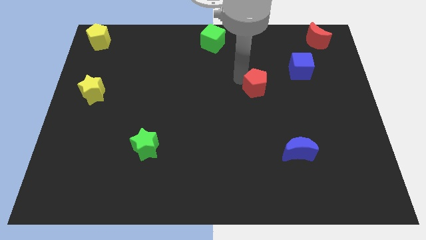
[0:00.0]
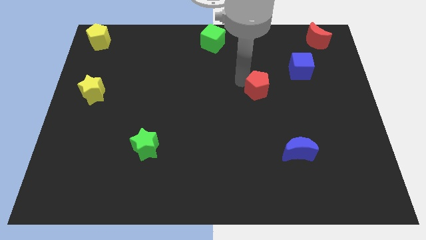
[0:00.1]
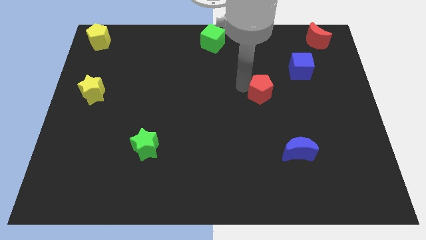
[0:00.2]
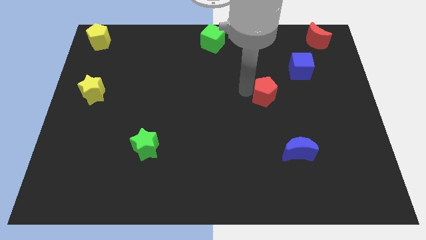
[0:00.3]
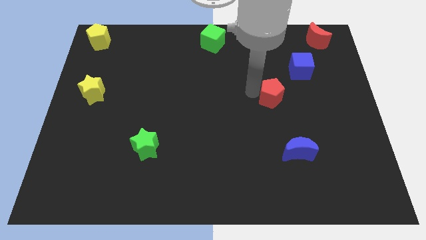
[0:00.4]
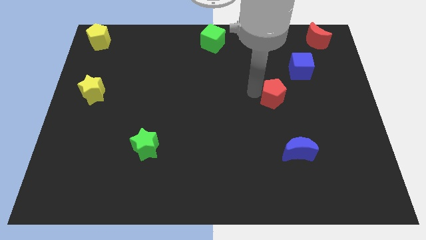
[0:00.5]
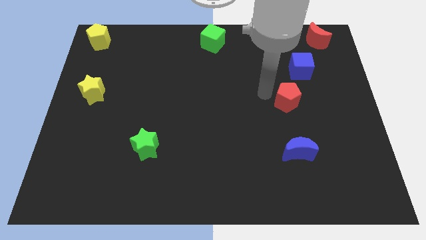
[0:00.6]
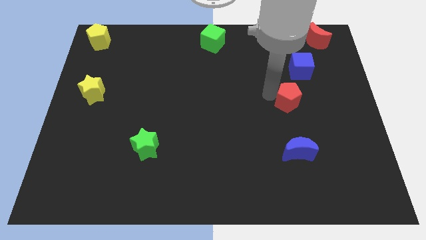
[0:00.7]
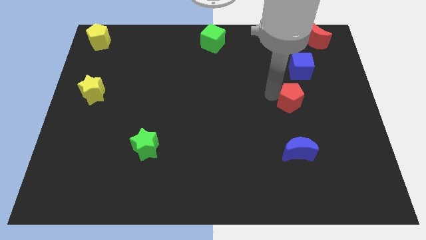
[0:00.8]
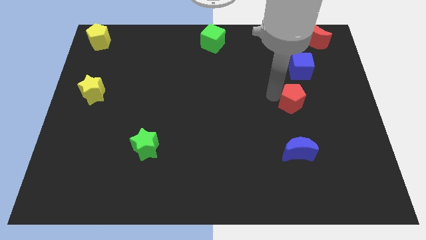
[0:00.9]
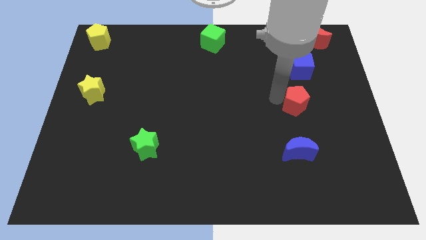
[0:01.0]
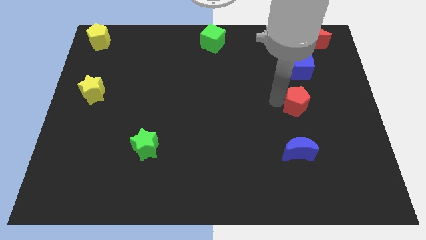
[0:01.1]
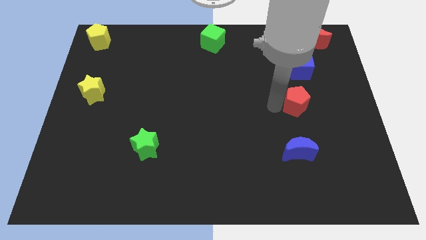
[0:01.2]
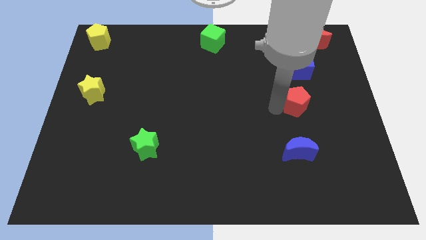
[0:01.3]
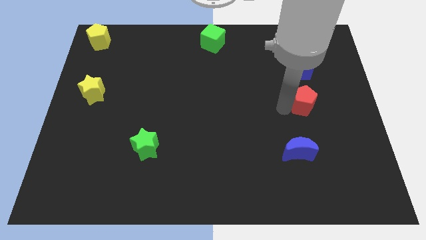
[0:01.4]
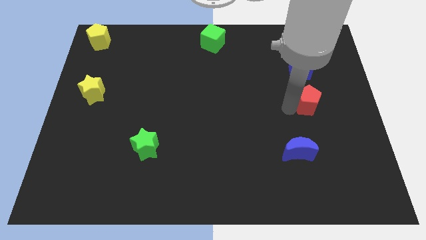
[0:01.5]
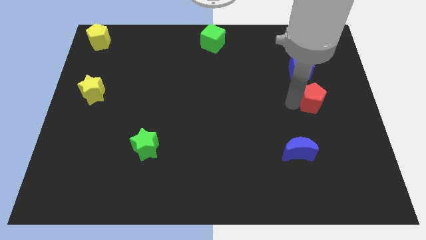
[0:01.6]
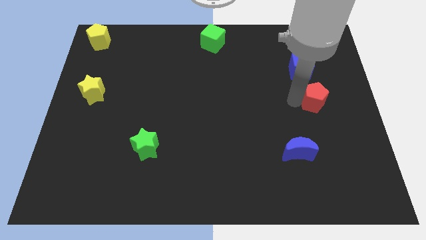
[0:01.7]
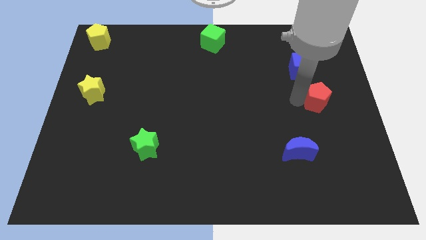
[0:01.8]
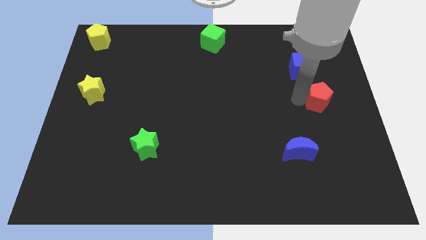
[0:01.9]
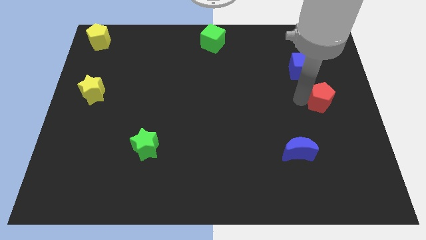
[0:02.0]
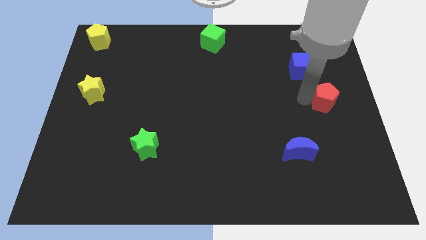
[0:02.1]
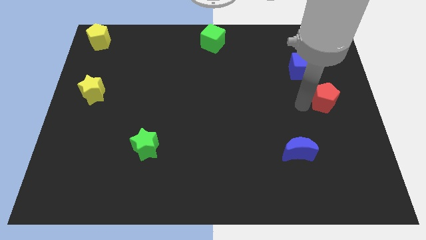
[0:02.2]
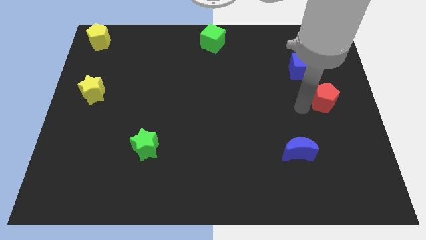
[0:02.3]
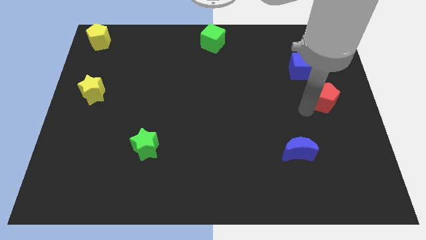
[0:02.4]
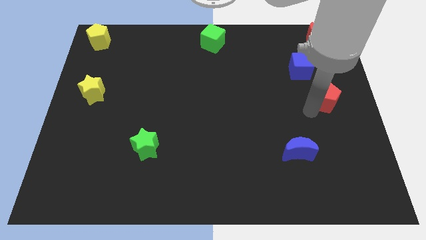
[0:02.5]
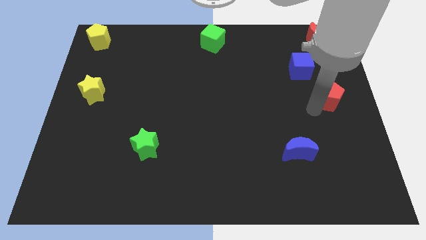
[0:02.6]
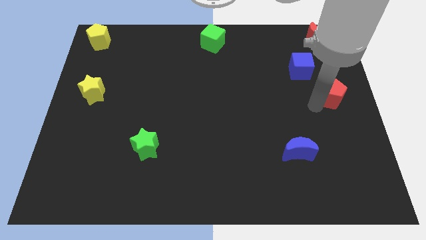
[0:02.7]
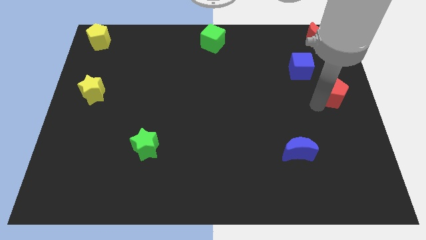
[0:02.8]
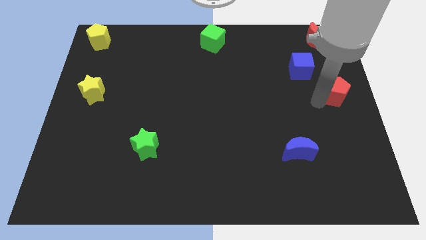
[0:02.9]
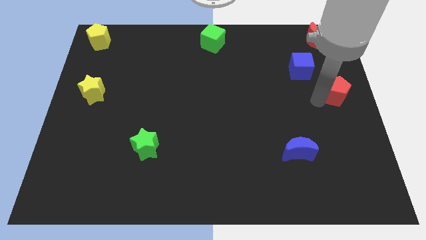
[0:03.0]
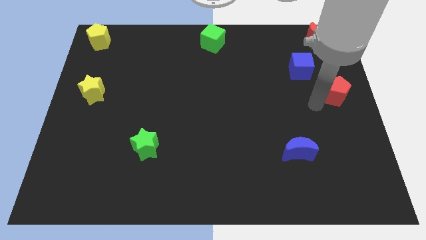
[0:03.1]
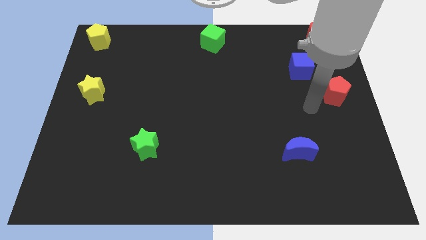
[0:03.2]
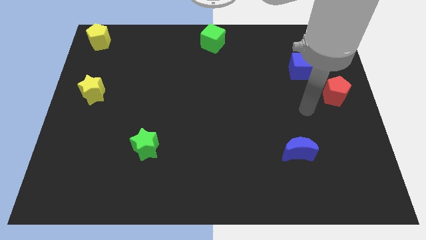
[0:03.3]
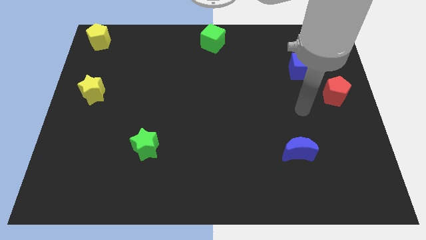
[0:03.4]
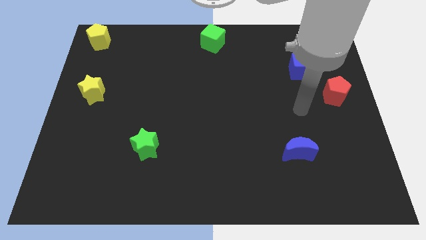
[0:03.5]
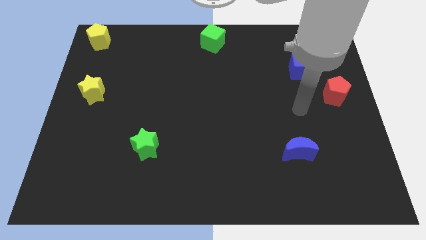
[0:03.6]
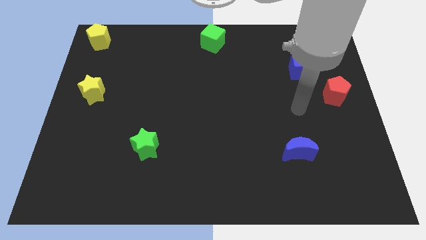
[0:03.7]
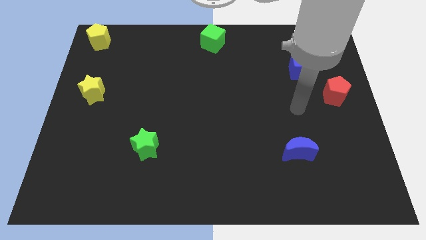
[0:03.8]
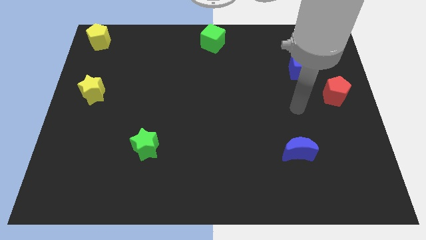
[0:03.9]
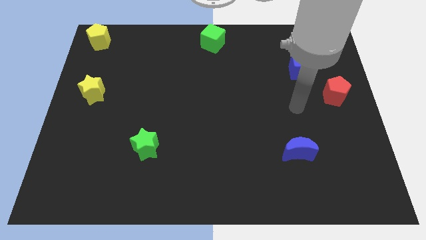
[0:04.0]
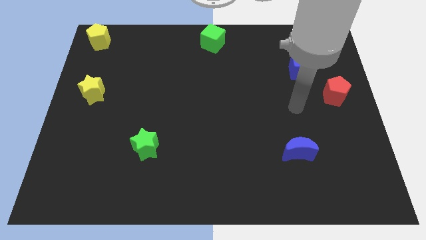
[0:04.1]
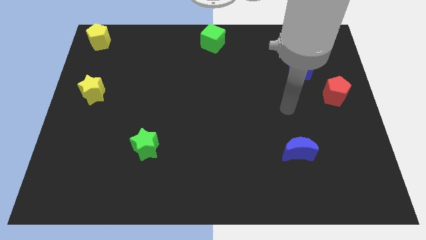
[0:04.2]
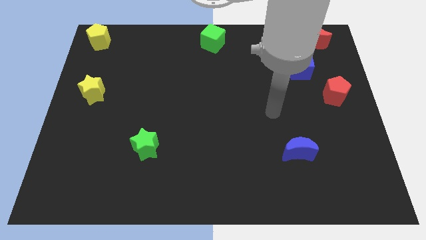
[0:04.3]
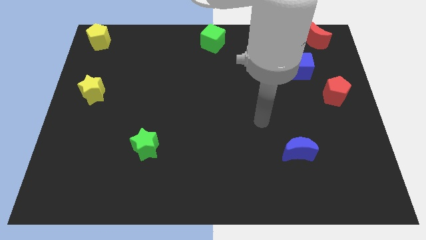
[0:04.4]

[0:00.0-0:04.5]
move the red pentagon to the right of the board

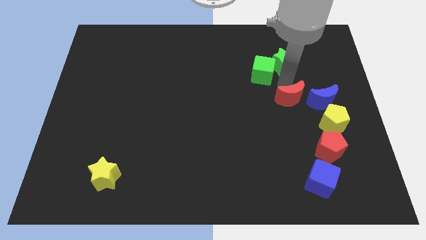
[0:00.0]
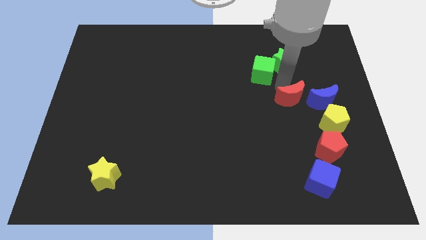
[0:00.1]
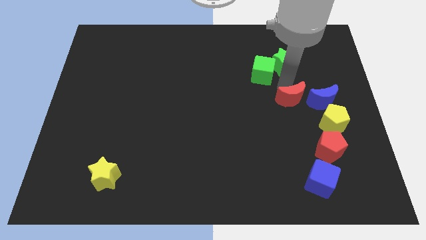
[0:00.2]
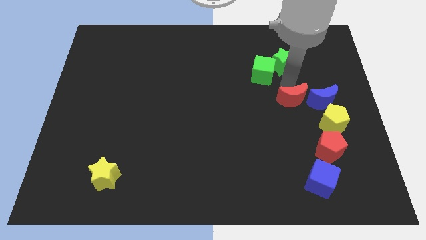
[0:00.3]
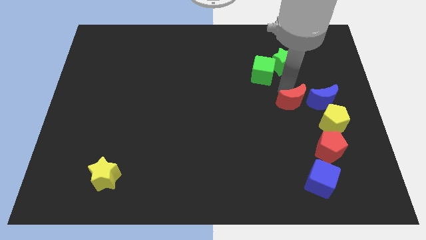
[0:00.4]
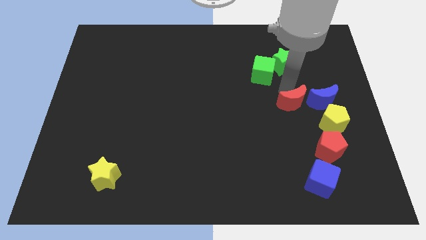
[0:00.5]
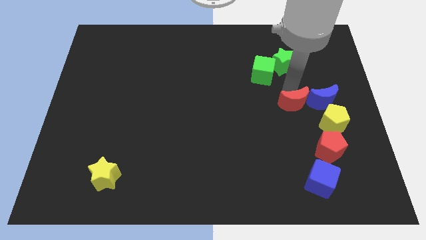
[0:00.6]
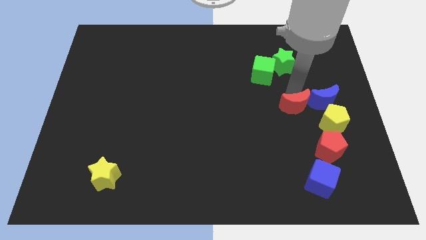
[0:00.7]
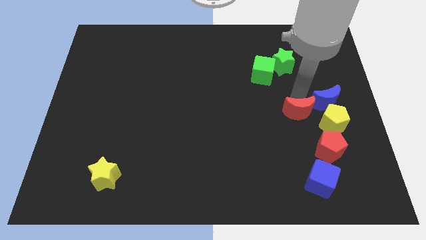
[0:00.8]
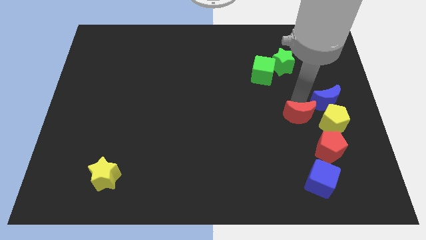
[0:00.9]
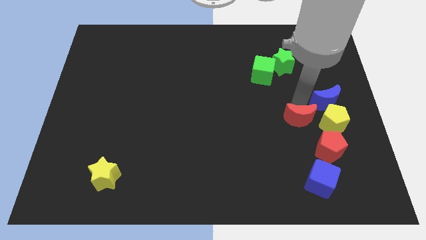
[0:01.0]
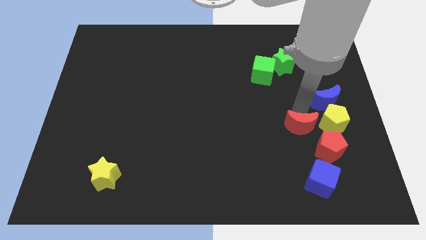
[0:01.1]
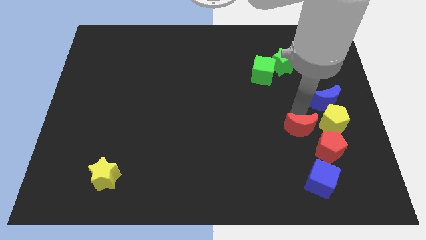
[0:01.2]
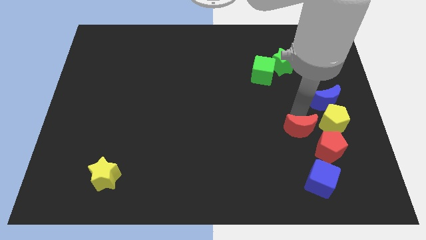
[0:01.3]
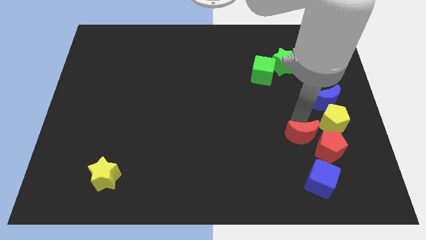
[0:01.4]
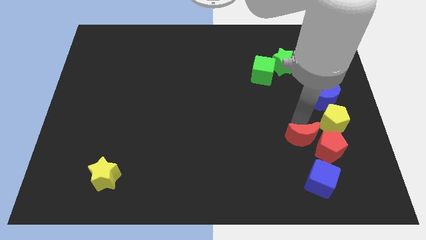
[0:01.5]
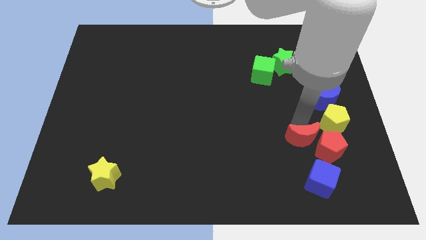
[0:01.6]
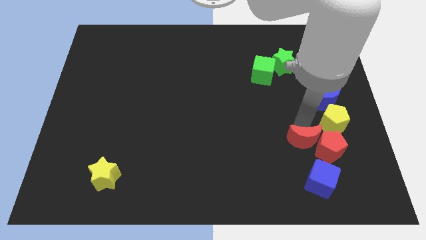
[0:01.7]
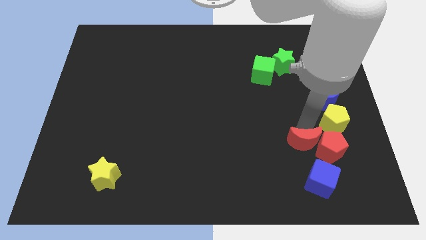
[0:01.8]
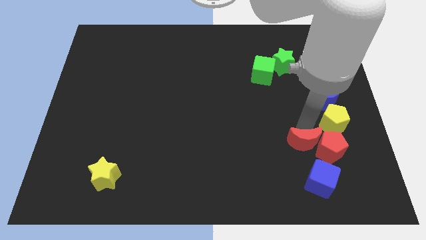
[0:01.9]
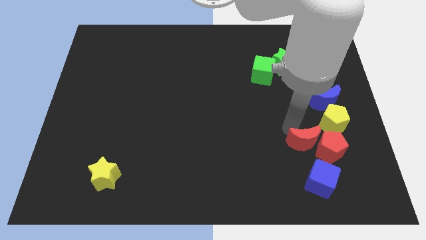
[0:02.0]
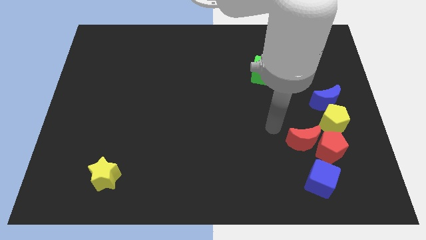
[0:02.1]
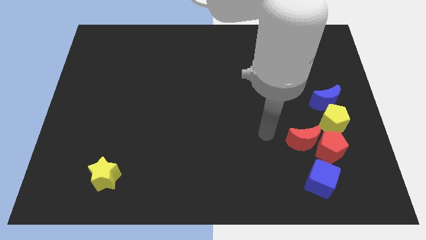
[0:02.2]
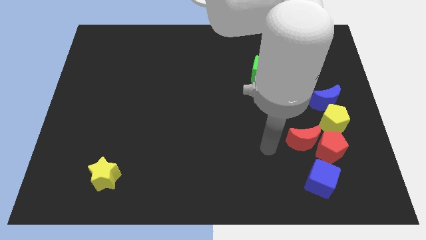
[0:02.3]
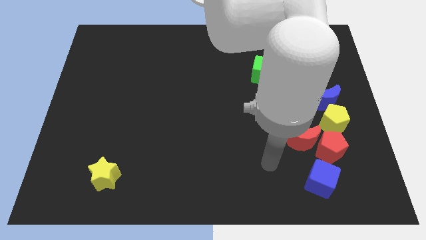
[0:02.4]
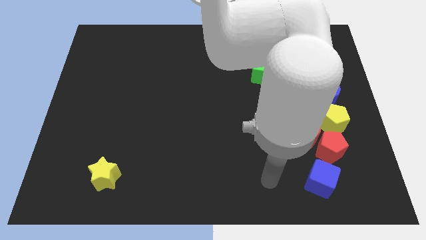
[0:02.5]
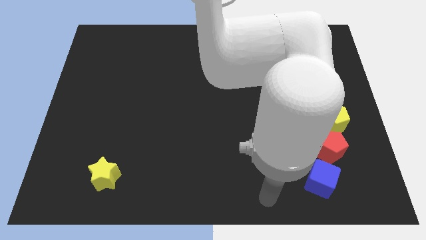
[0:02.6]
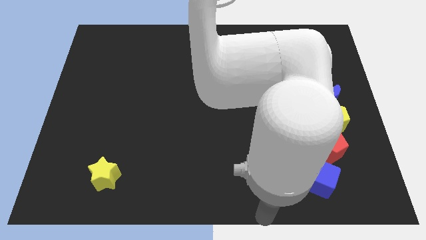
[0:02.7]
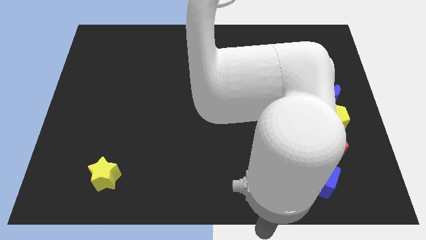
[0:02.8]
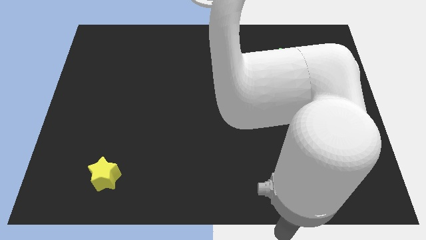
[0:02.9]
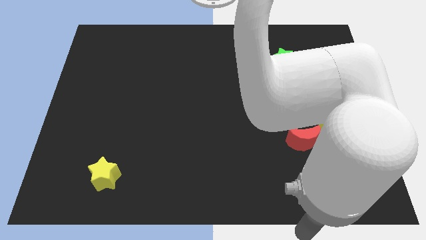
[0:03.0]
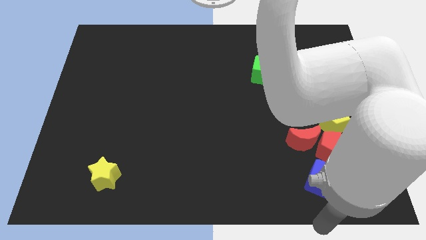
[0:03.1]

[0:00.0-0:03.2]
move the red moon into the red pentagon

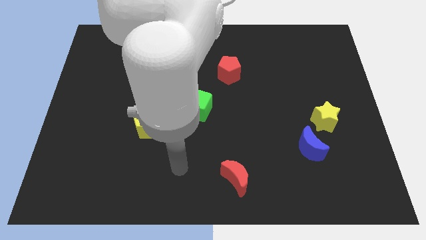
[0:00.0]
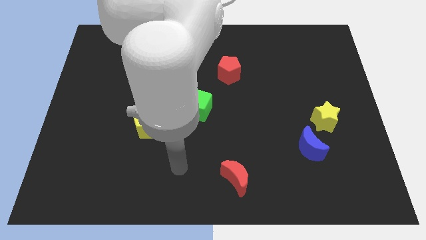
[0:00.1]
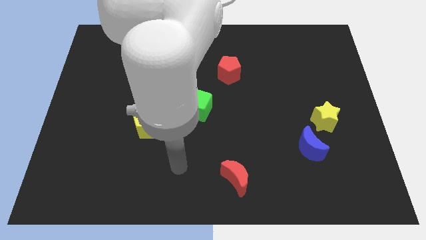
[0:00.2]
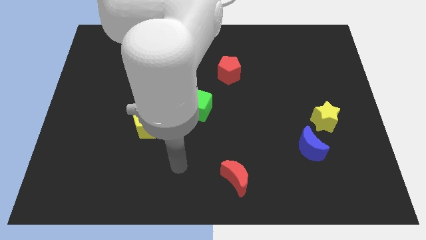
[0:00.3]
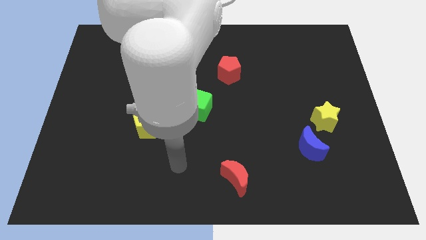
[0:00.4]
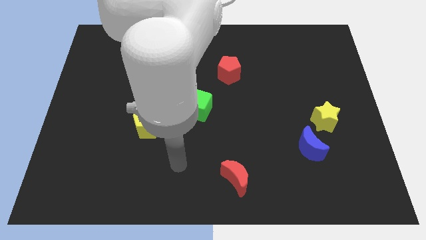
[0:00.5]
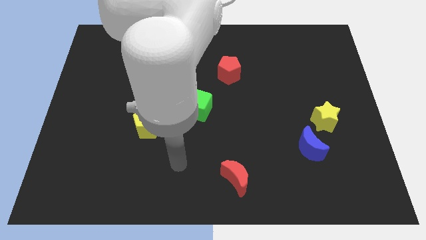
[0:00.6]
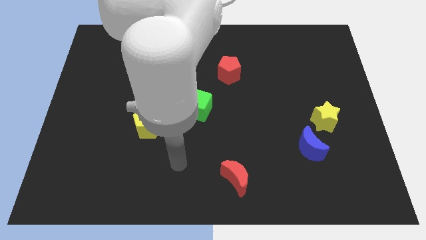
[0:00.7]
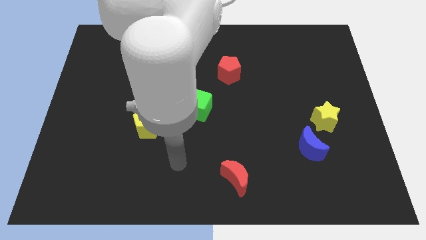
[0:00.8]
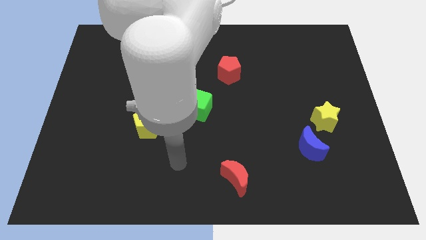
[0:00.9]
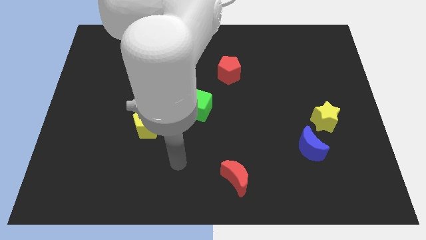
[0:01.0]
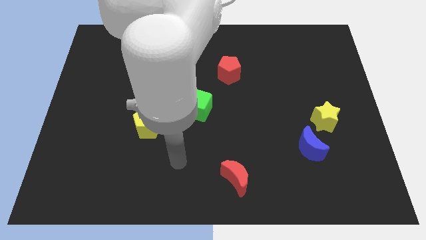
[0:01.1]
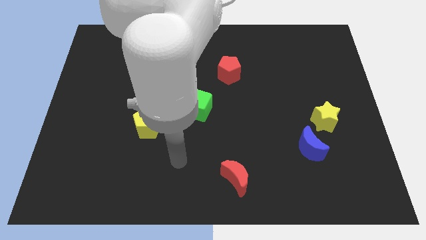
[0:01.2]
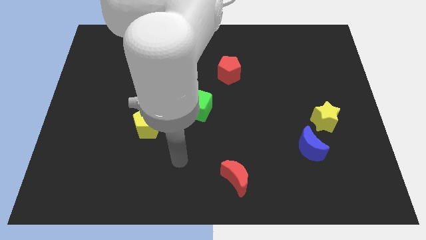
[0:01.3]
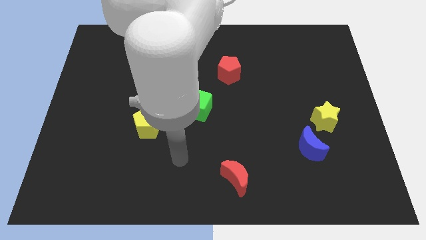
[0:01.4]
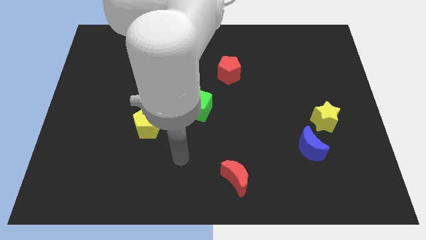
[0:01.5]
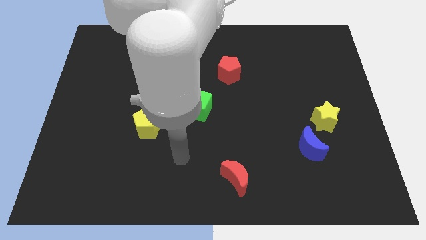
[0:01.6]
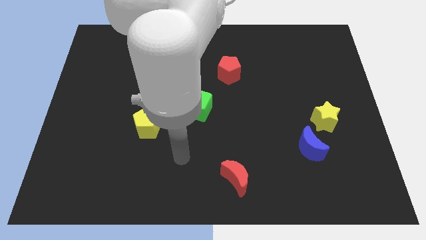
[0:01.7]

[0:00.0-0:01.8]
move arm near green cube
